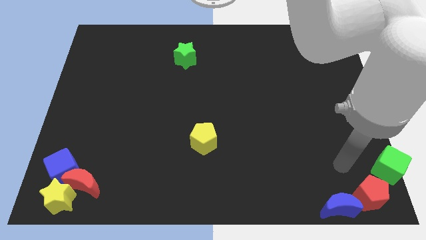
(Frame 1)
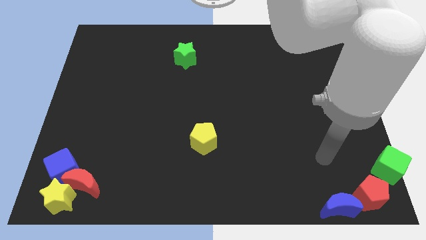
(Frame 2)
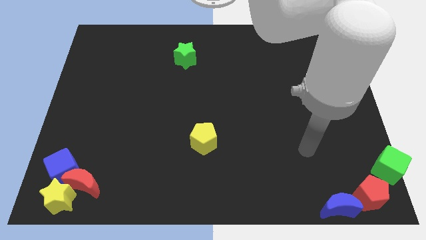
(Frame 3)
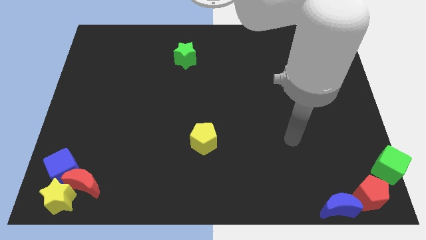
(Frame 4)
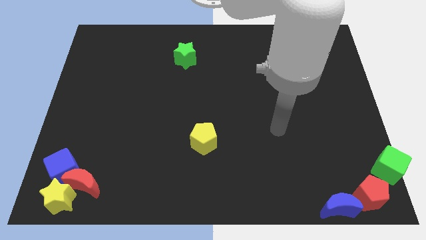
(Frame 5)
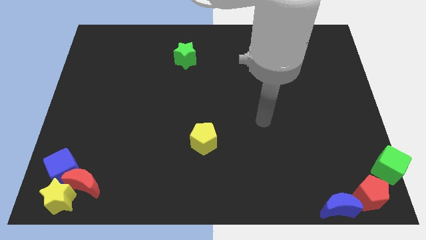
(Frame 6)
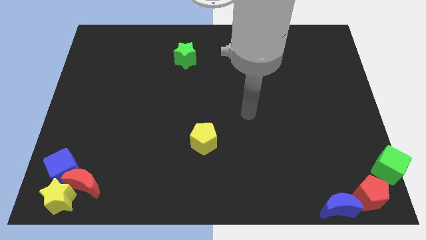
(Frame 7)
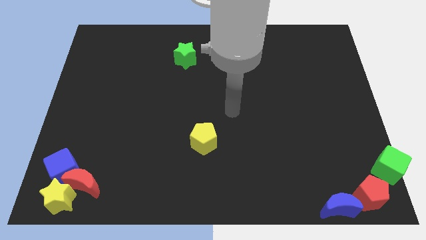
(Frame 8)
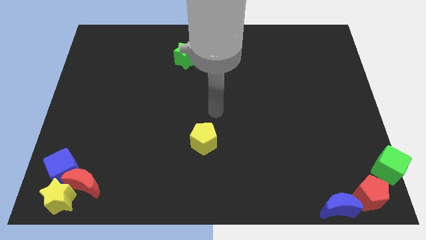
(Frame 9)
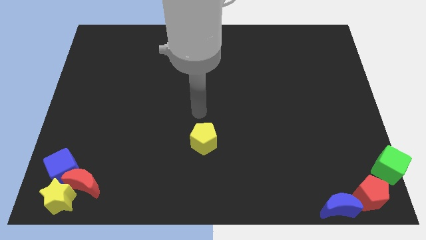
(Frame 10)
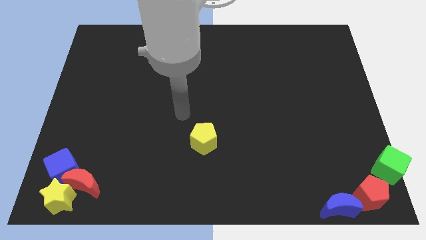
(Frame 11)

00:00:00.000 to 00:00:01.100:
place your hand at center of the board

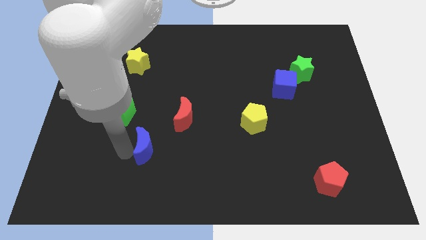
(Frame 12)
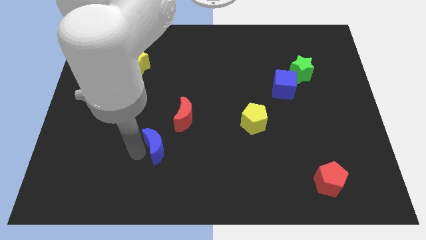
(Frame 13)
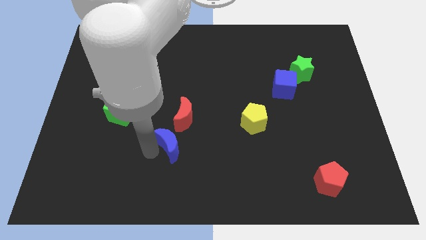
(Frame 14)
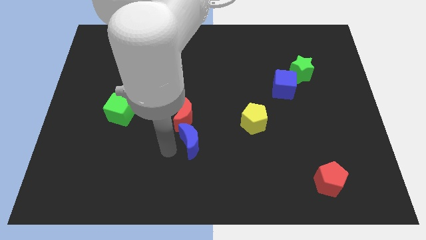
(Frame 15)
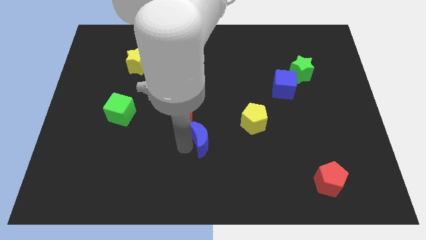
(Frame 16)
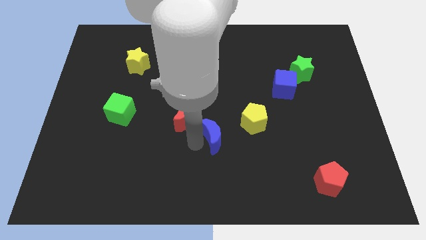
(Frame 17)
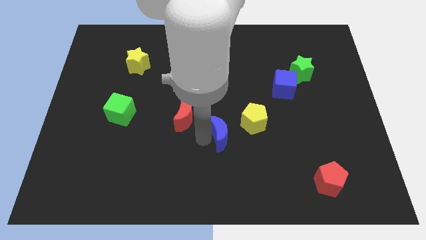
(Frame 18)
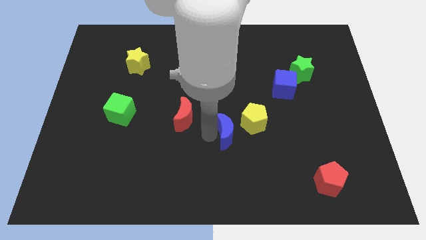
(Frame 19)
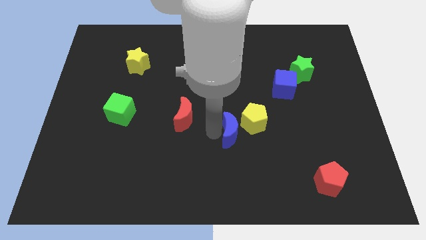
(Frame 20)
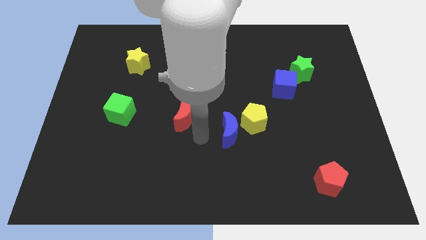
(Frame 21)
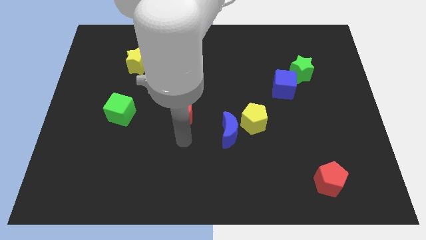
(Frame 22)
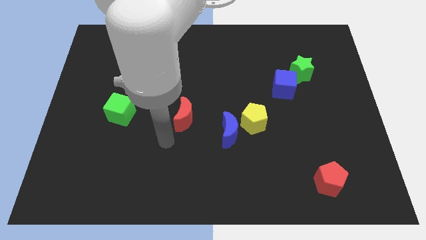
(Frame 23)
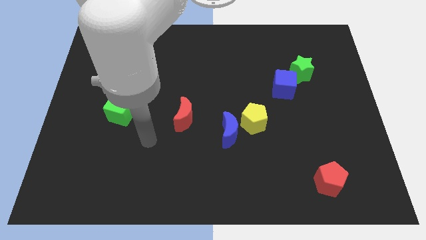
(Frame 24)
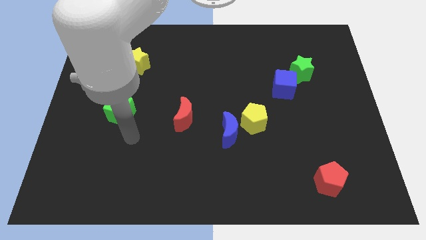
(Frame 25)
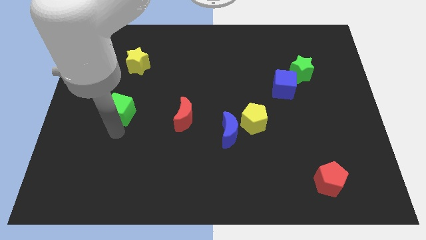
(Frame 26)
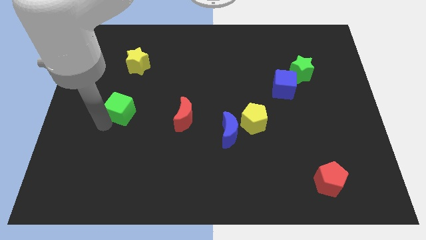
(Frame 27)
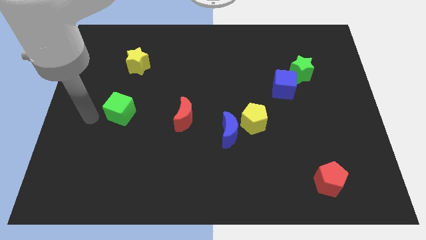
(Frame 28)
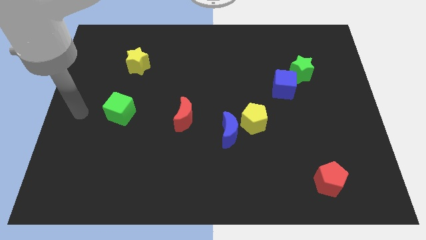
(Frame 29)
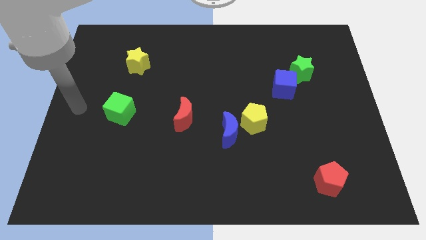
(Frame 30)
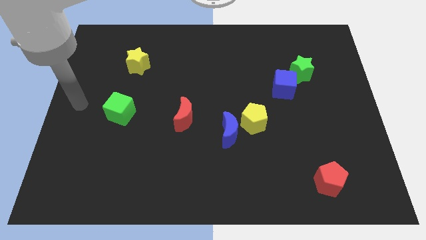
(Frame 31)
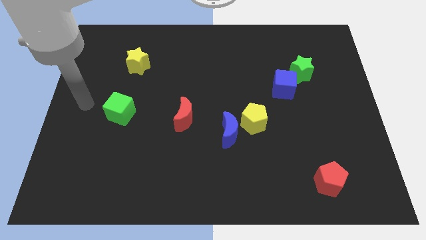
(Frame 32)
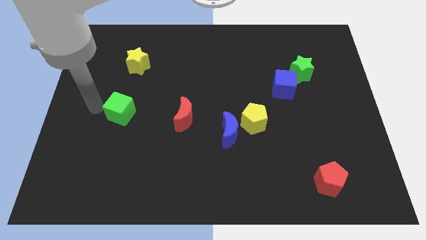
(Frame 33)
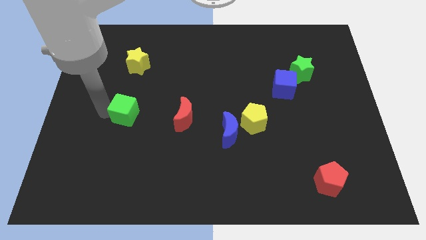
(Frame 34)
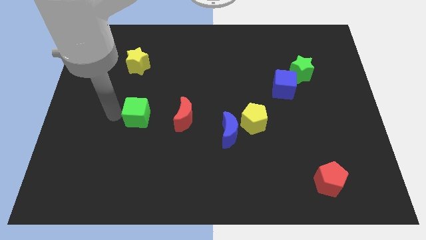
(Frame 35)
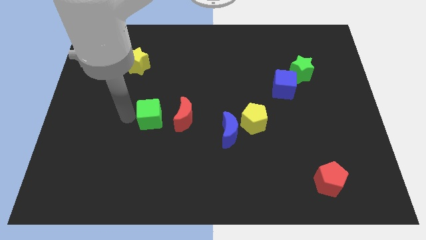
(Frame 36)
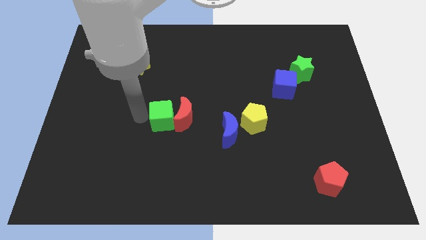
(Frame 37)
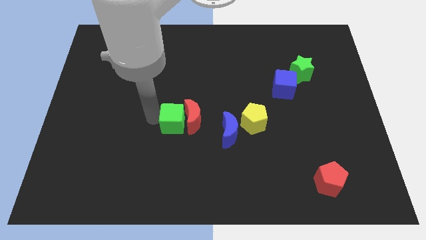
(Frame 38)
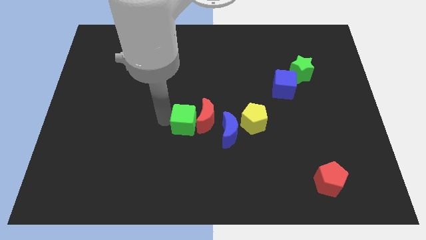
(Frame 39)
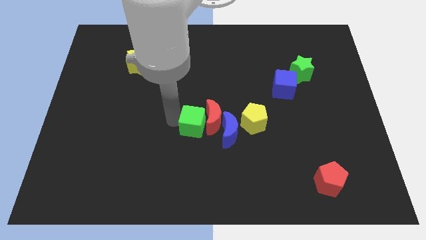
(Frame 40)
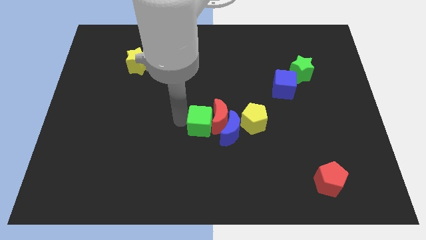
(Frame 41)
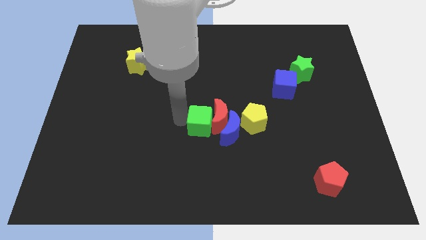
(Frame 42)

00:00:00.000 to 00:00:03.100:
group up the blue crescent green cube red crescent and yellow pentagon

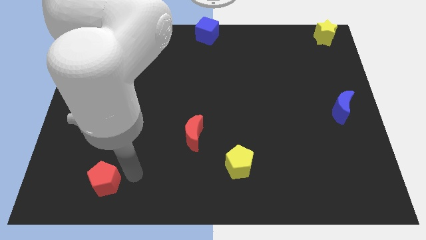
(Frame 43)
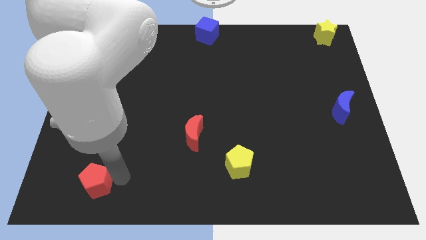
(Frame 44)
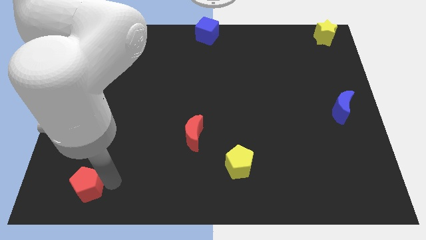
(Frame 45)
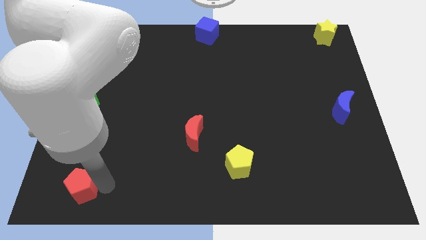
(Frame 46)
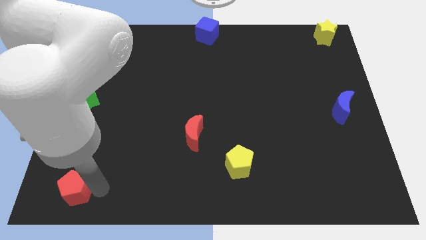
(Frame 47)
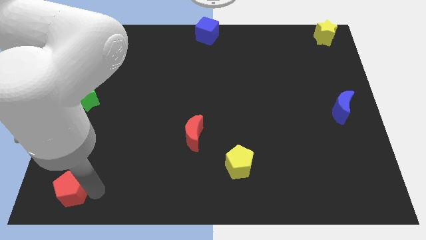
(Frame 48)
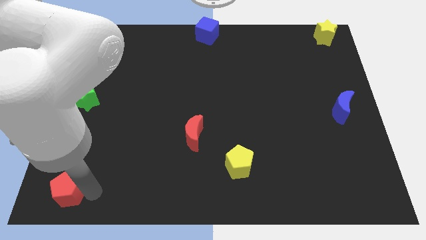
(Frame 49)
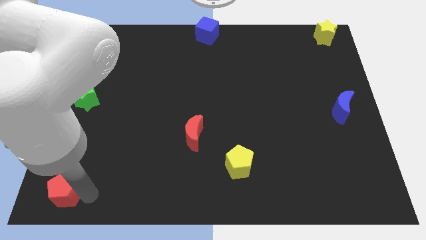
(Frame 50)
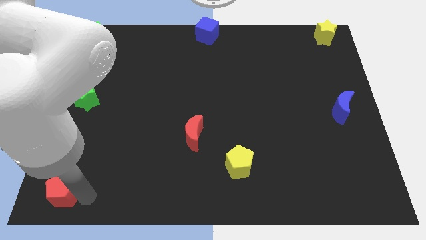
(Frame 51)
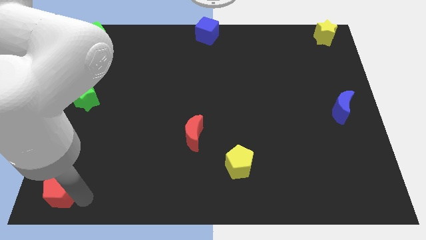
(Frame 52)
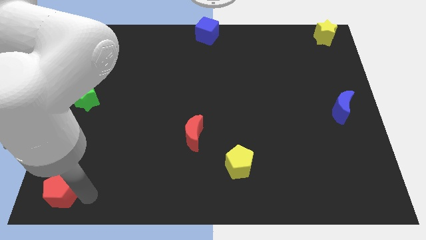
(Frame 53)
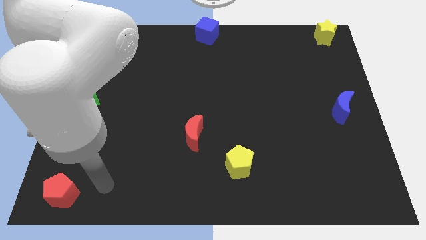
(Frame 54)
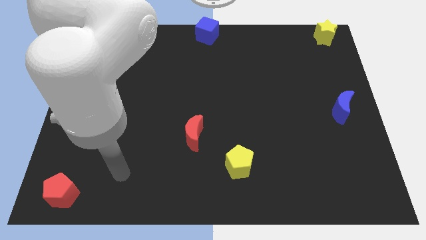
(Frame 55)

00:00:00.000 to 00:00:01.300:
move the red pentagon towards the bottom left side of the board

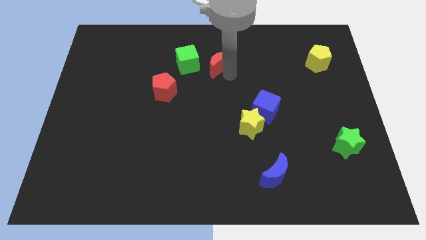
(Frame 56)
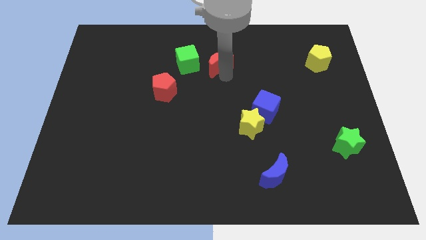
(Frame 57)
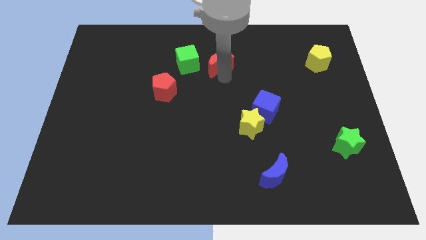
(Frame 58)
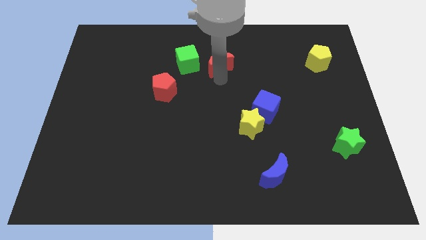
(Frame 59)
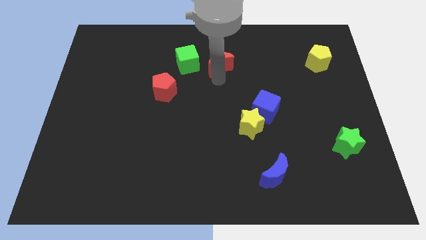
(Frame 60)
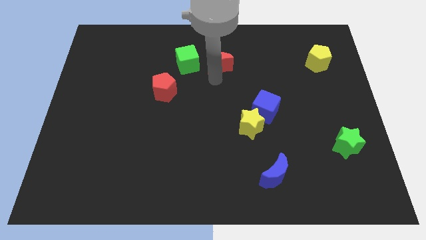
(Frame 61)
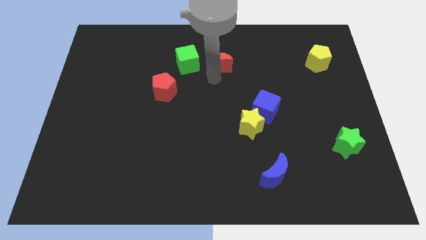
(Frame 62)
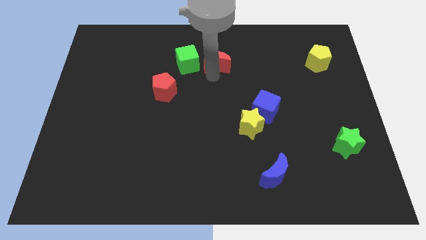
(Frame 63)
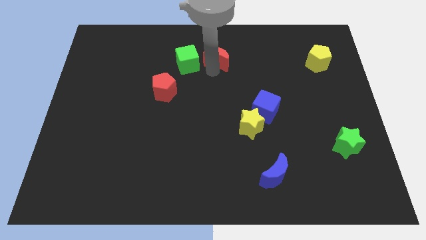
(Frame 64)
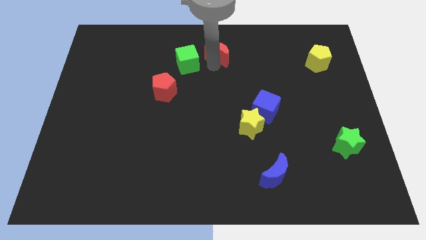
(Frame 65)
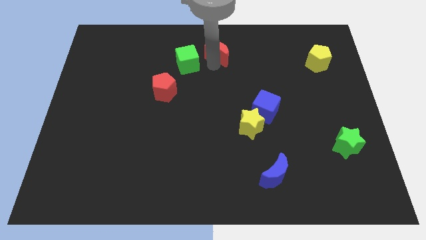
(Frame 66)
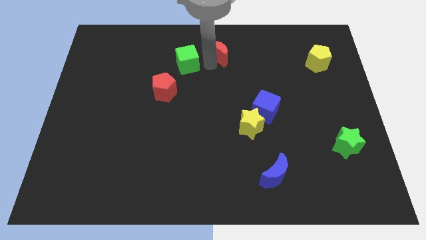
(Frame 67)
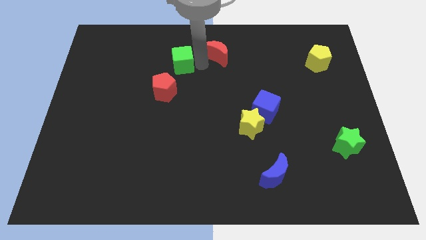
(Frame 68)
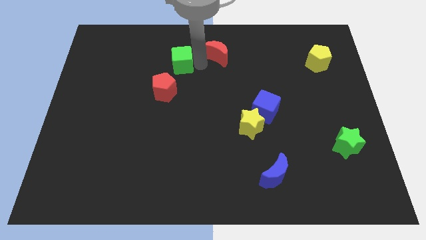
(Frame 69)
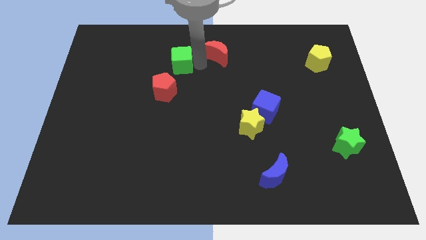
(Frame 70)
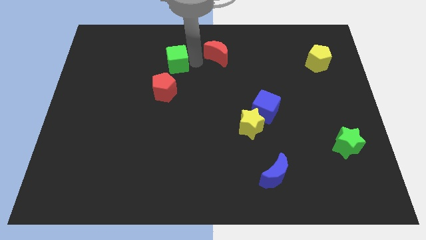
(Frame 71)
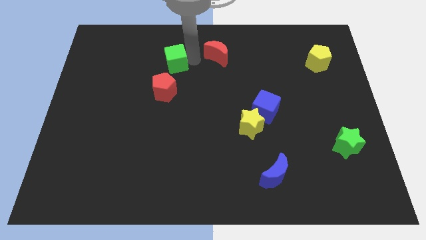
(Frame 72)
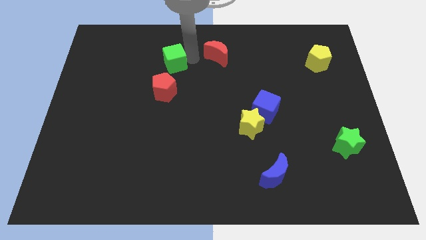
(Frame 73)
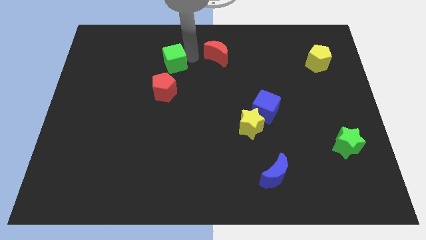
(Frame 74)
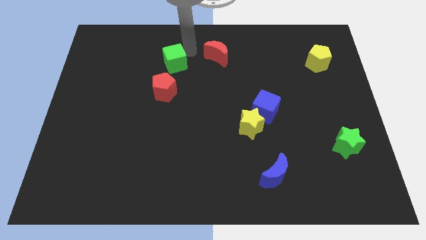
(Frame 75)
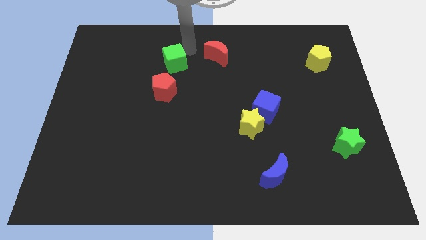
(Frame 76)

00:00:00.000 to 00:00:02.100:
drag the red moon and green cube towards right side

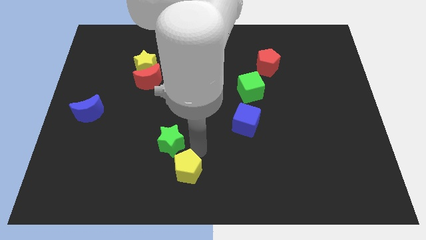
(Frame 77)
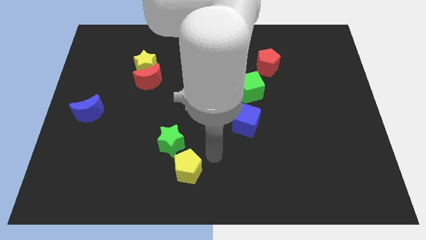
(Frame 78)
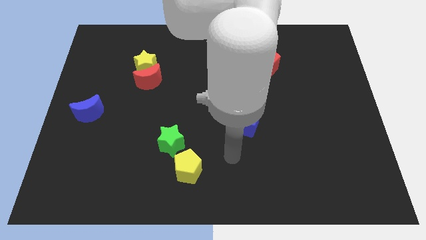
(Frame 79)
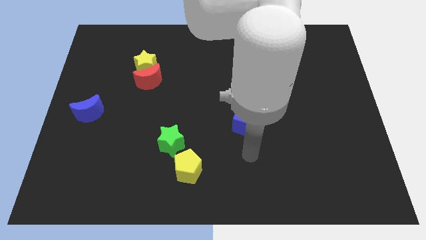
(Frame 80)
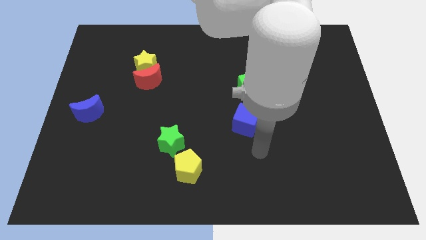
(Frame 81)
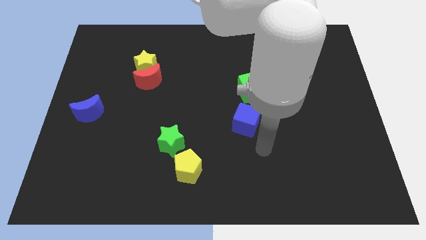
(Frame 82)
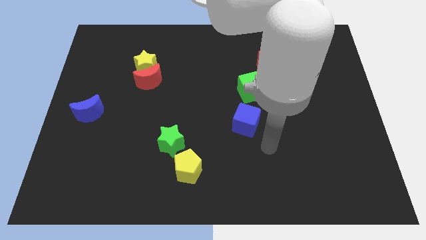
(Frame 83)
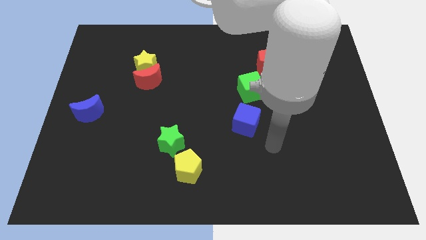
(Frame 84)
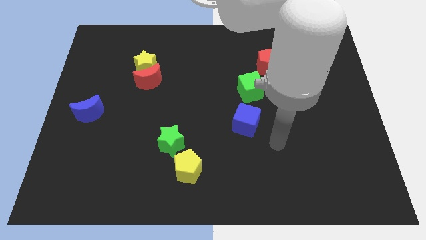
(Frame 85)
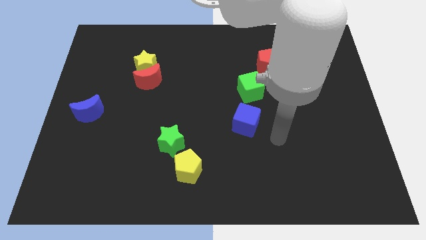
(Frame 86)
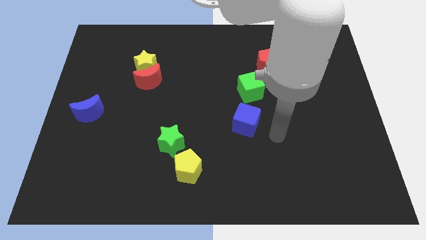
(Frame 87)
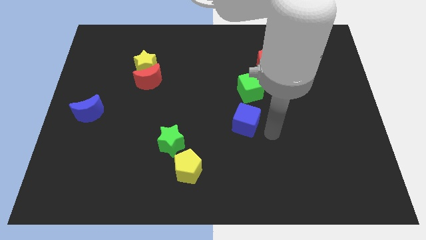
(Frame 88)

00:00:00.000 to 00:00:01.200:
move your arm to the right of the board
